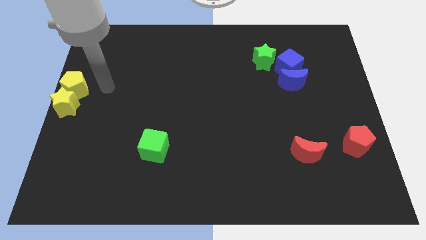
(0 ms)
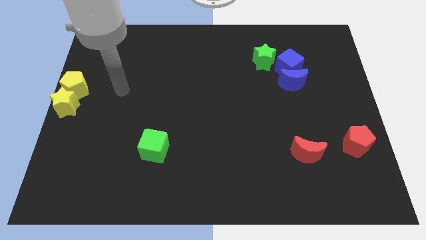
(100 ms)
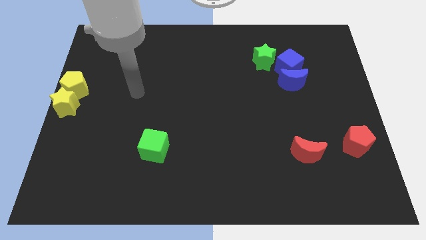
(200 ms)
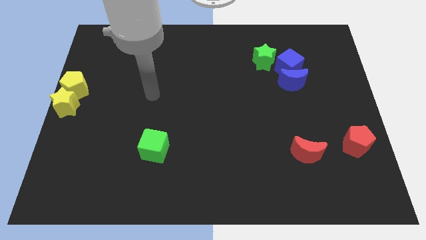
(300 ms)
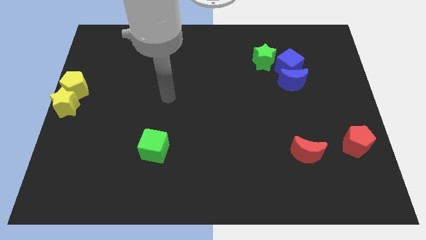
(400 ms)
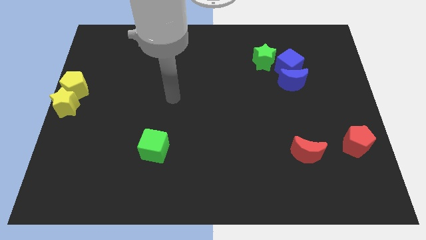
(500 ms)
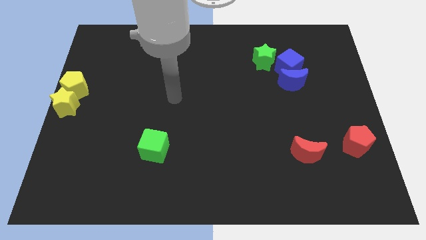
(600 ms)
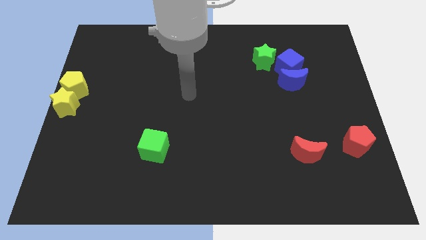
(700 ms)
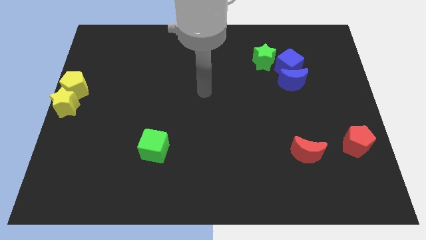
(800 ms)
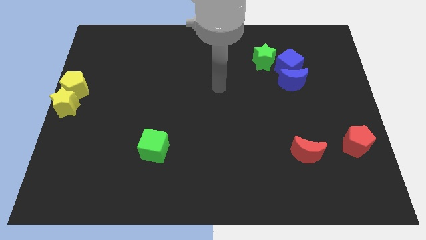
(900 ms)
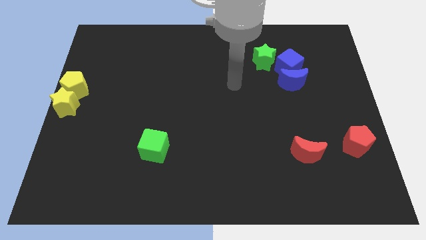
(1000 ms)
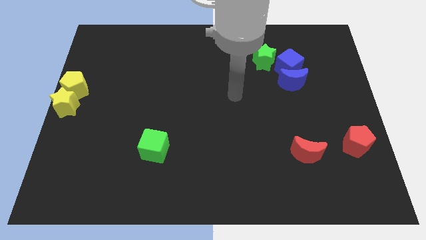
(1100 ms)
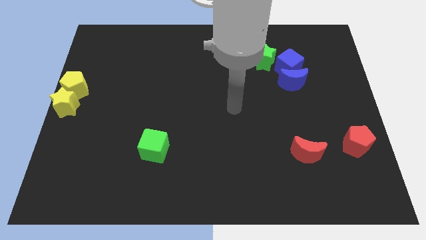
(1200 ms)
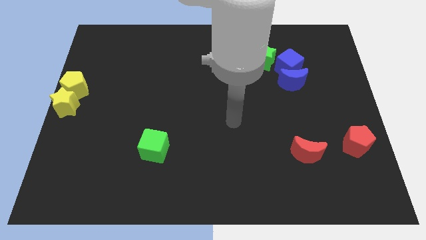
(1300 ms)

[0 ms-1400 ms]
point your arm at the center of the board

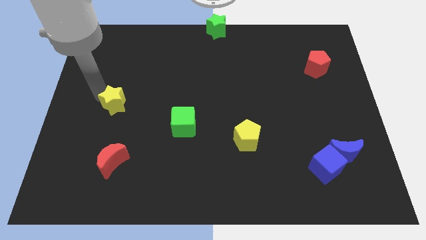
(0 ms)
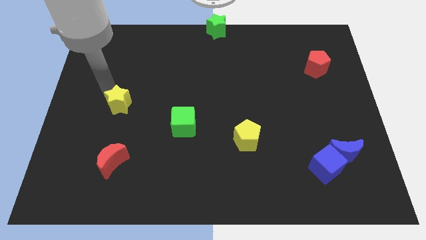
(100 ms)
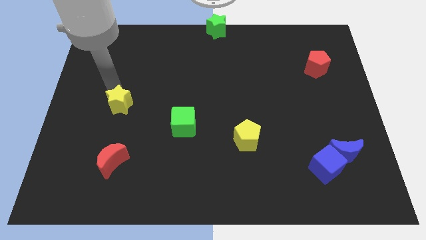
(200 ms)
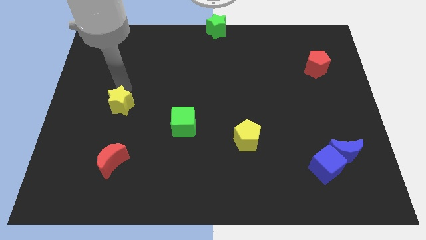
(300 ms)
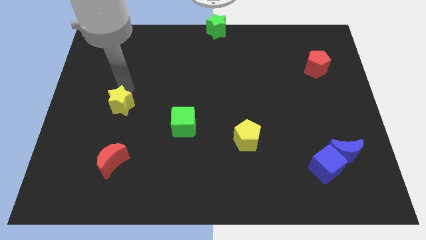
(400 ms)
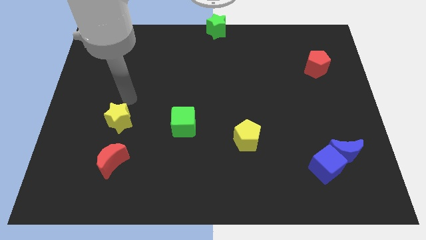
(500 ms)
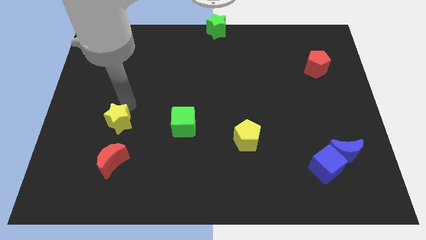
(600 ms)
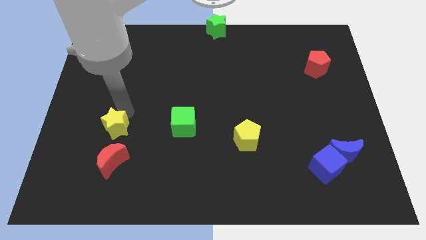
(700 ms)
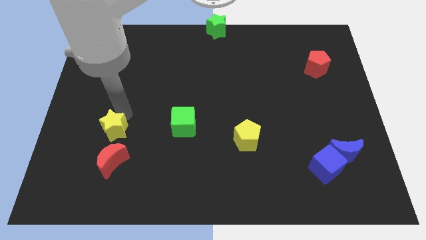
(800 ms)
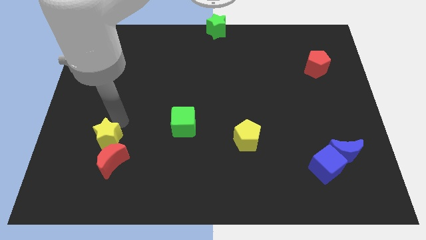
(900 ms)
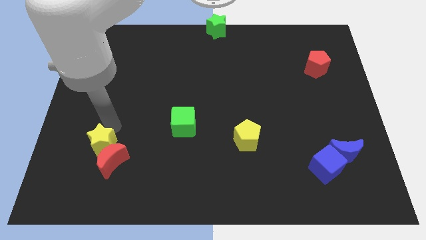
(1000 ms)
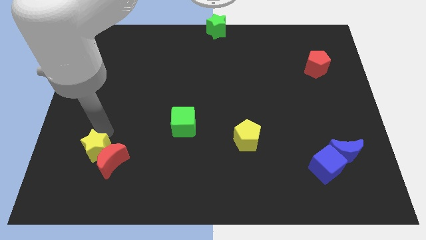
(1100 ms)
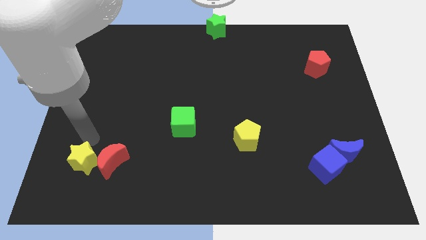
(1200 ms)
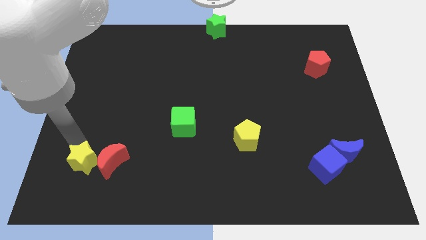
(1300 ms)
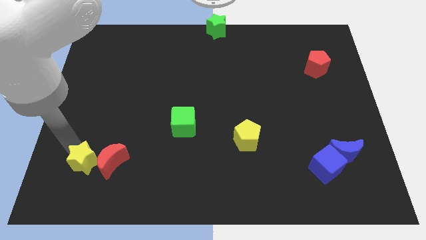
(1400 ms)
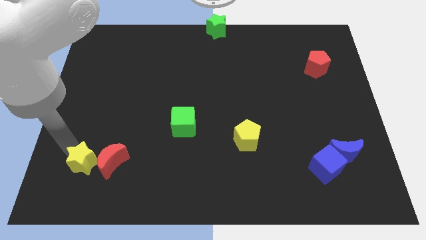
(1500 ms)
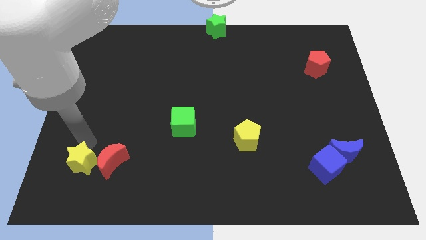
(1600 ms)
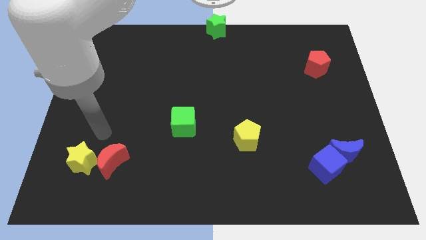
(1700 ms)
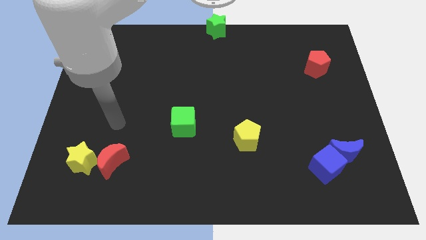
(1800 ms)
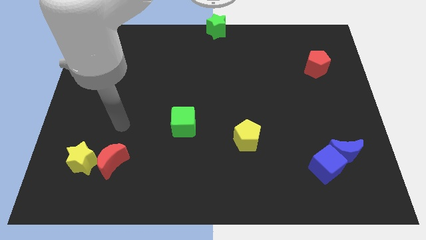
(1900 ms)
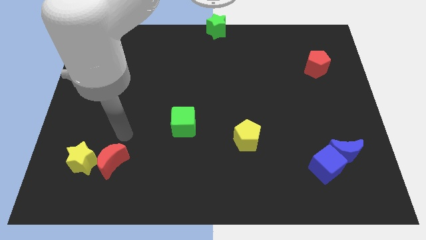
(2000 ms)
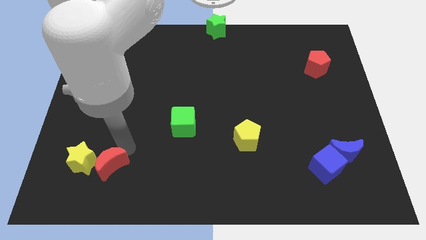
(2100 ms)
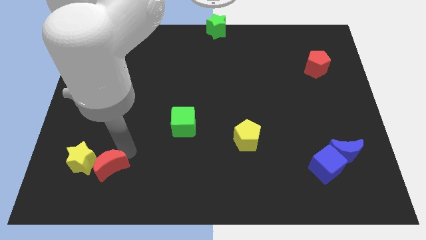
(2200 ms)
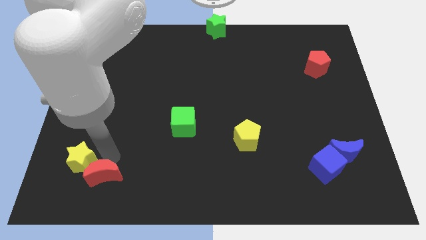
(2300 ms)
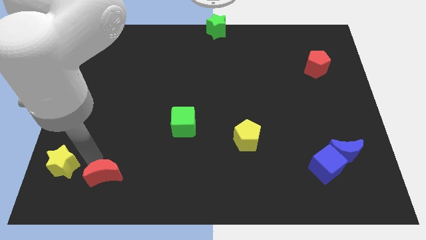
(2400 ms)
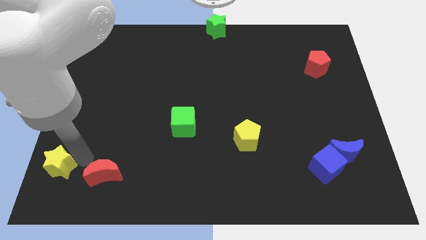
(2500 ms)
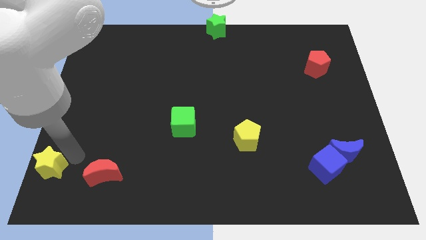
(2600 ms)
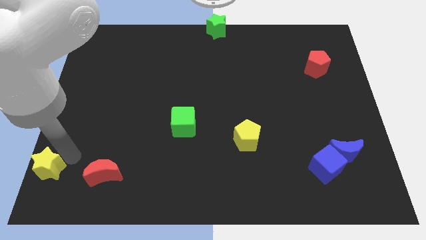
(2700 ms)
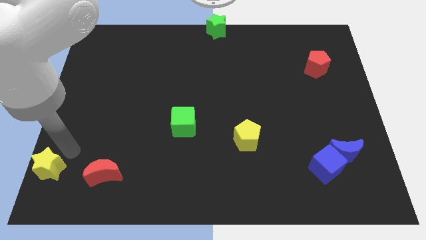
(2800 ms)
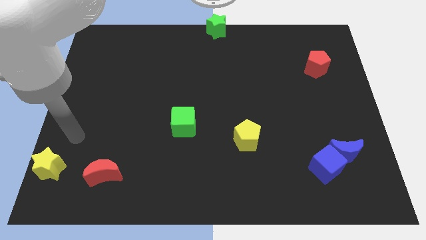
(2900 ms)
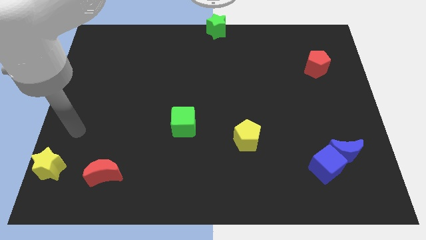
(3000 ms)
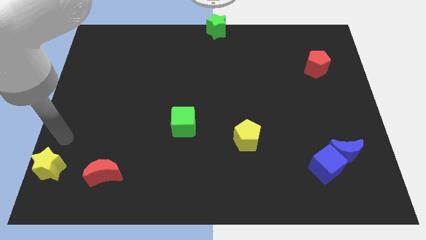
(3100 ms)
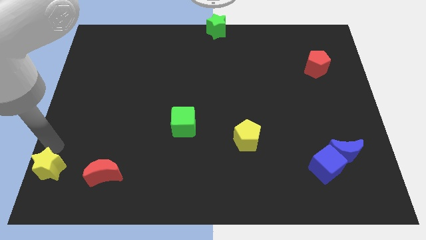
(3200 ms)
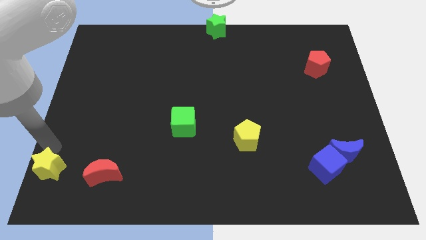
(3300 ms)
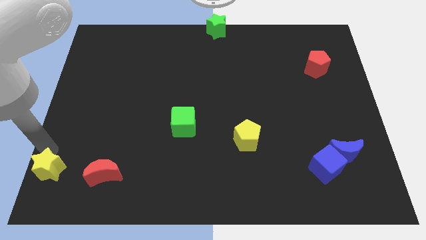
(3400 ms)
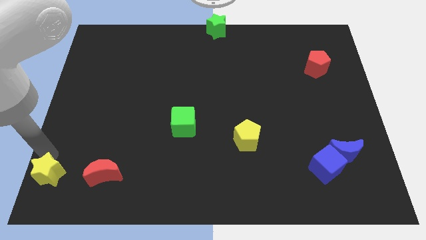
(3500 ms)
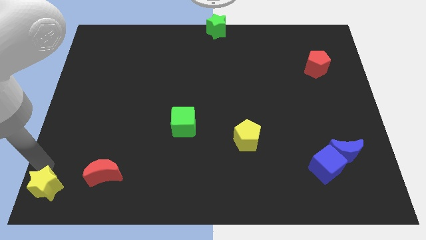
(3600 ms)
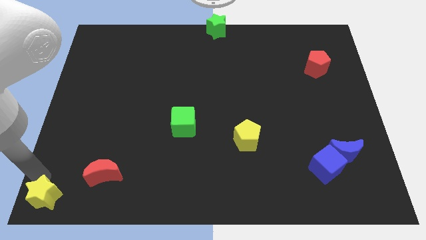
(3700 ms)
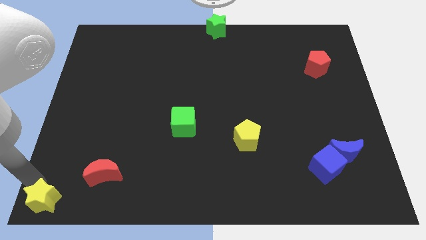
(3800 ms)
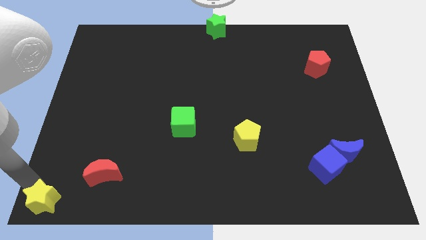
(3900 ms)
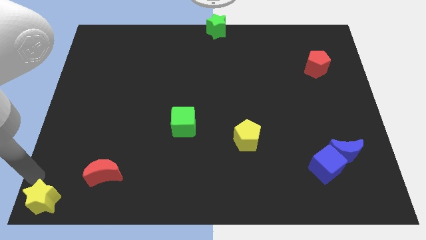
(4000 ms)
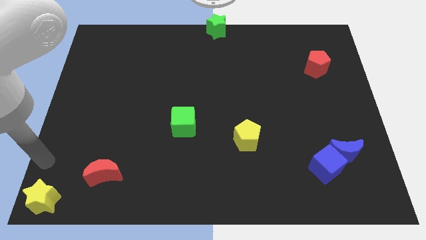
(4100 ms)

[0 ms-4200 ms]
push the yellow star to the bottom left corner

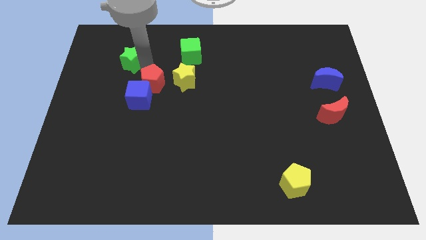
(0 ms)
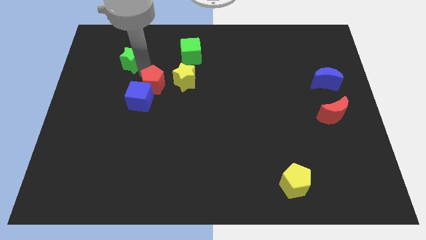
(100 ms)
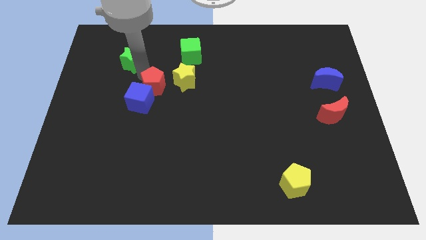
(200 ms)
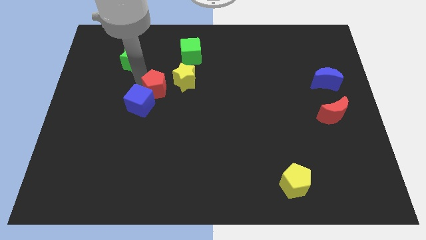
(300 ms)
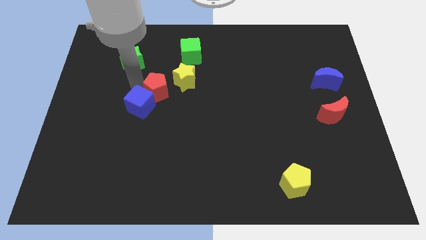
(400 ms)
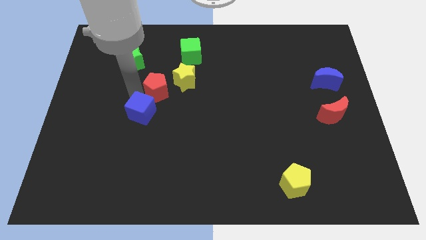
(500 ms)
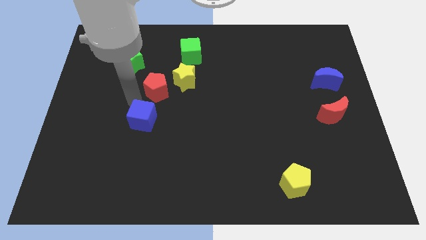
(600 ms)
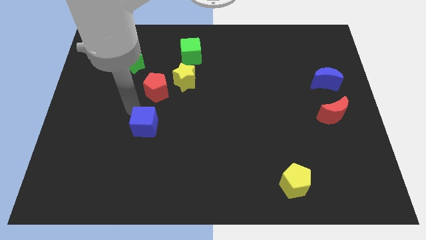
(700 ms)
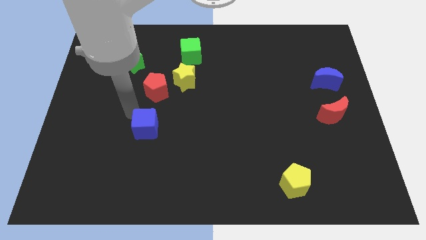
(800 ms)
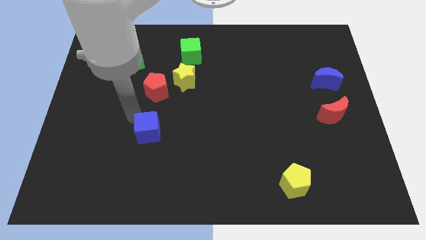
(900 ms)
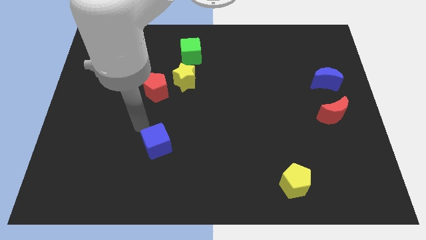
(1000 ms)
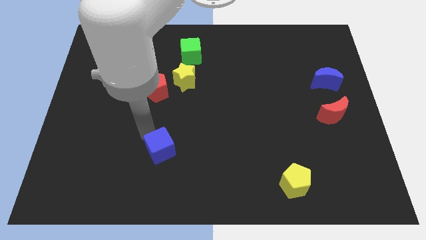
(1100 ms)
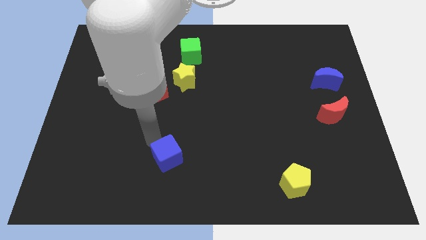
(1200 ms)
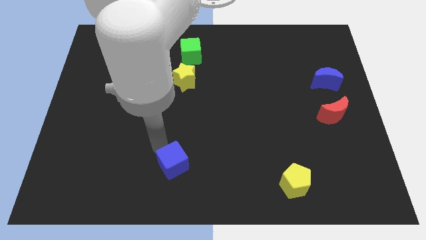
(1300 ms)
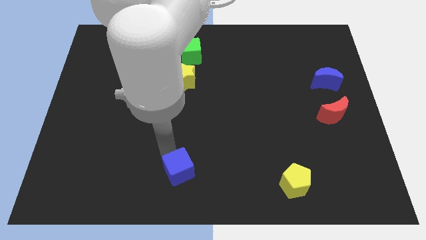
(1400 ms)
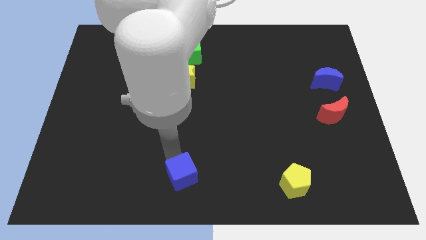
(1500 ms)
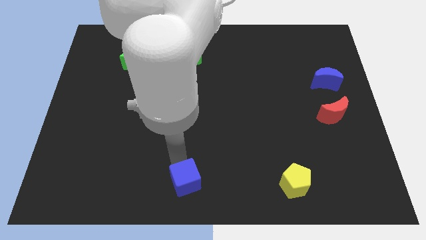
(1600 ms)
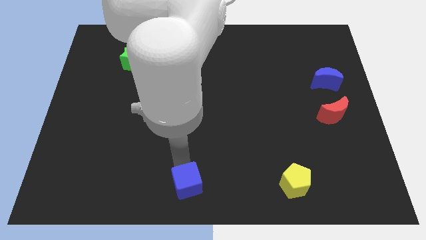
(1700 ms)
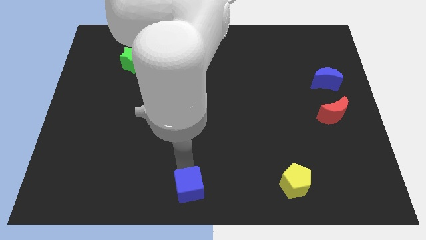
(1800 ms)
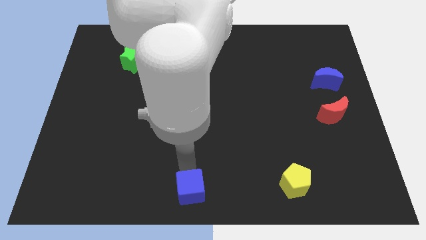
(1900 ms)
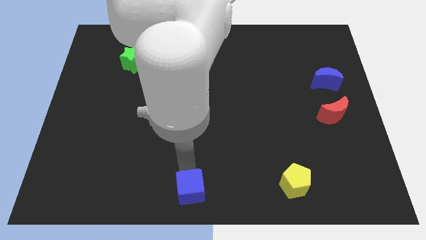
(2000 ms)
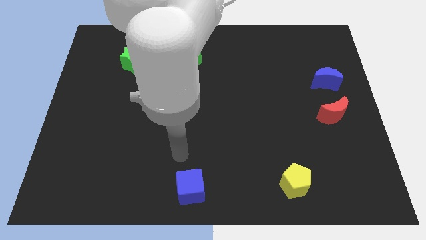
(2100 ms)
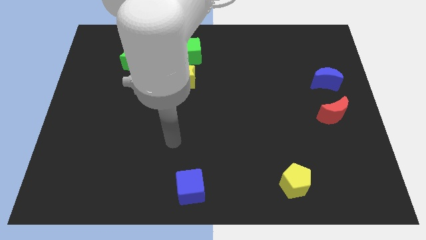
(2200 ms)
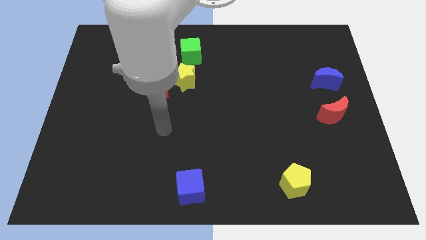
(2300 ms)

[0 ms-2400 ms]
place the blue cube at bottom center of the board

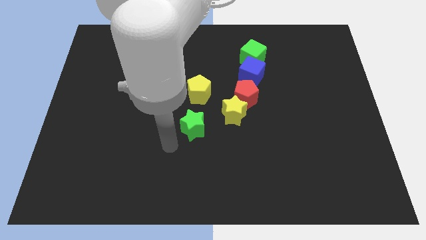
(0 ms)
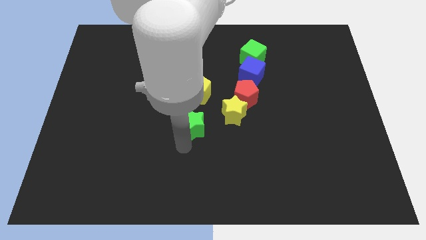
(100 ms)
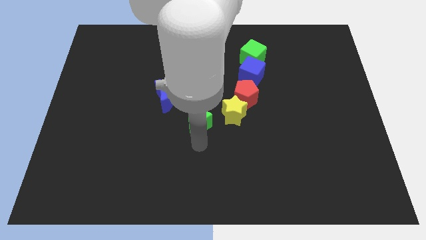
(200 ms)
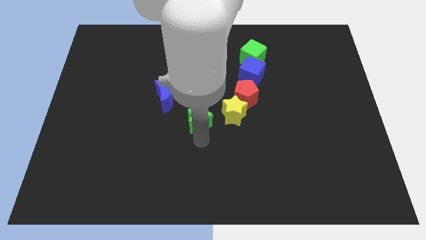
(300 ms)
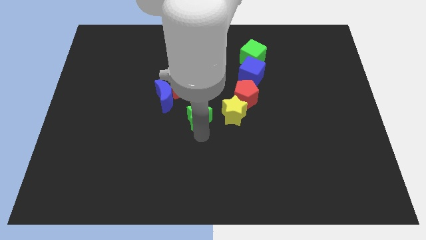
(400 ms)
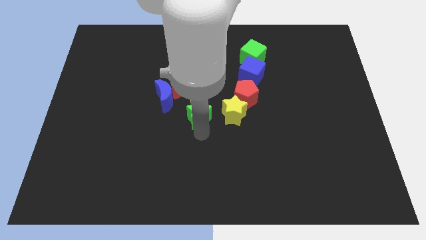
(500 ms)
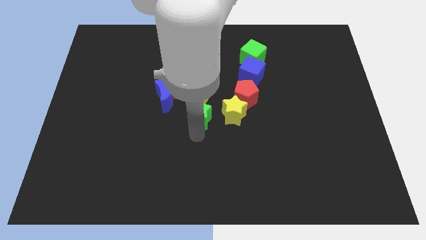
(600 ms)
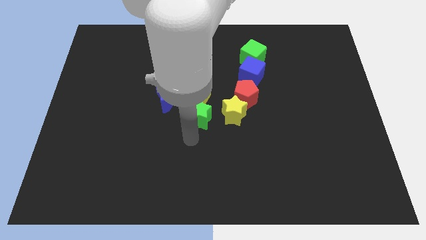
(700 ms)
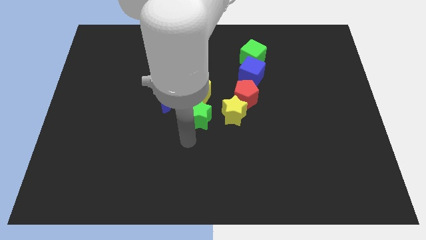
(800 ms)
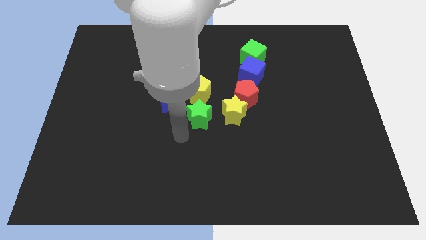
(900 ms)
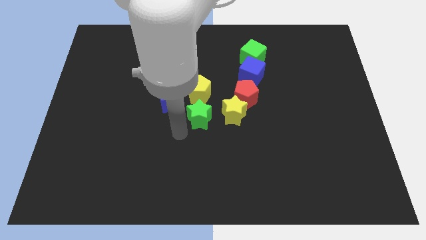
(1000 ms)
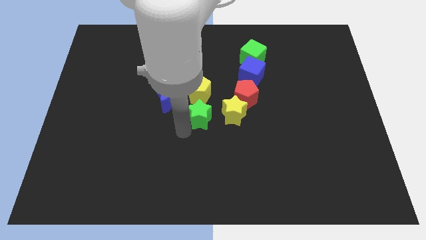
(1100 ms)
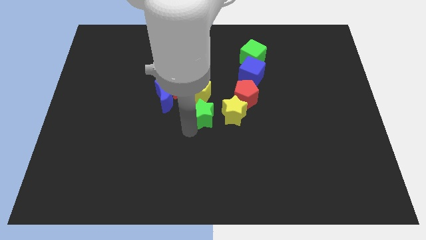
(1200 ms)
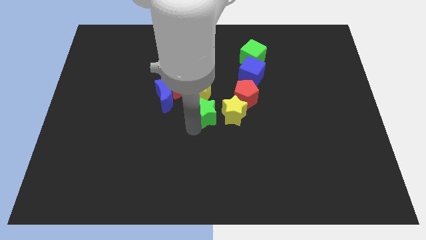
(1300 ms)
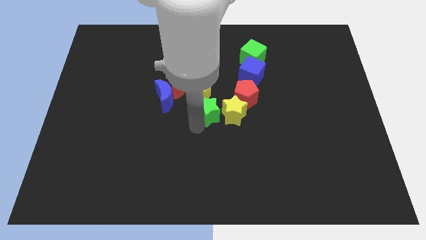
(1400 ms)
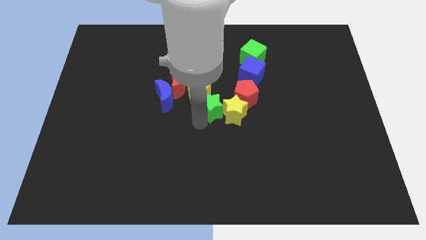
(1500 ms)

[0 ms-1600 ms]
push the green star into the yellow star
